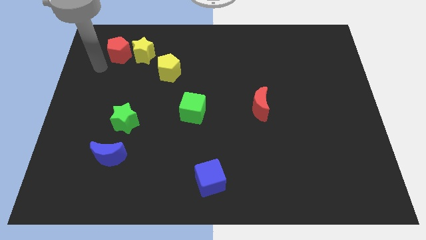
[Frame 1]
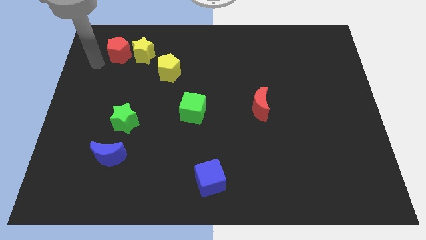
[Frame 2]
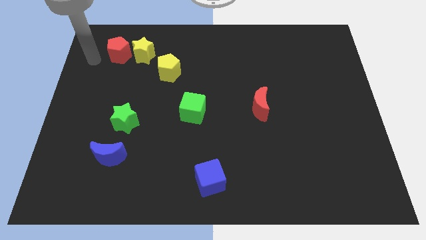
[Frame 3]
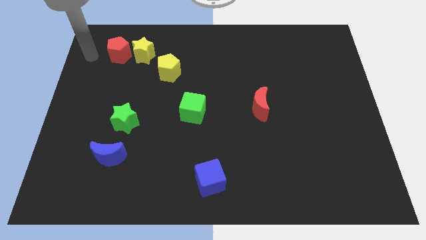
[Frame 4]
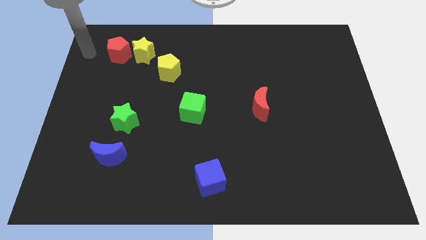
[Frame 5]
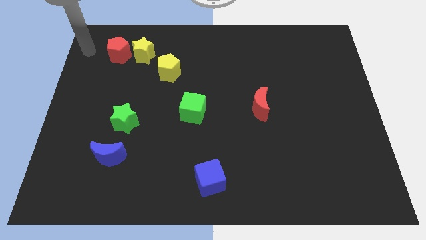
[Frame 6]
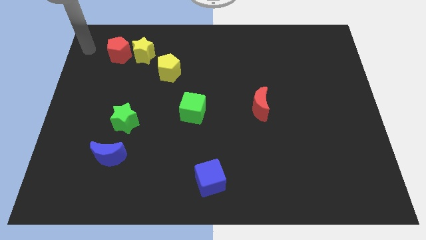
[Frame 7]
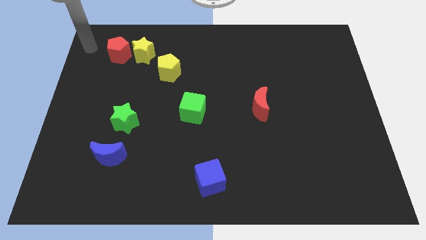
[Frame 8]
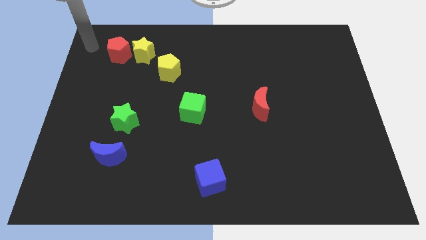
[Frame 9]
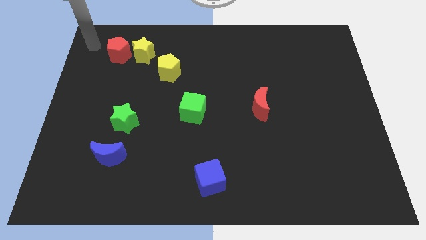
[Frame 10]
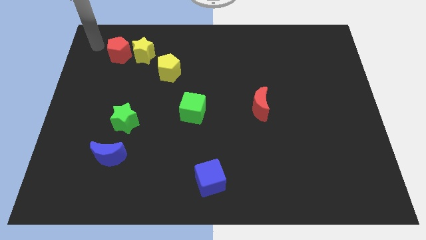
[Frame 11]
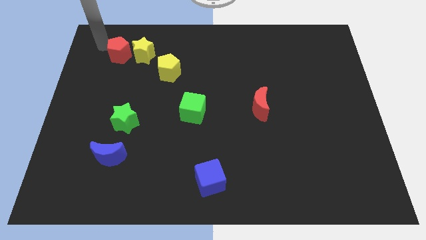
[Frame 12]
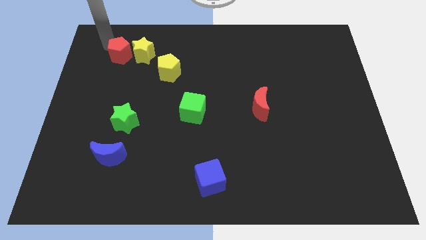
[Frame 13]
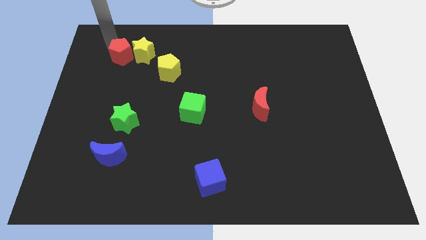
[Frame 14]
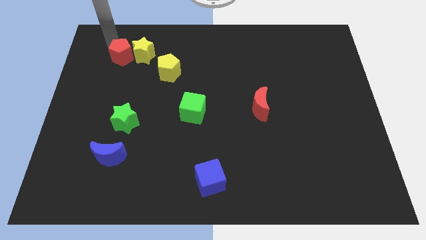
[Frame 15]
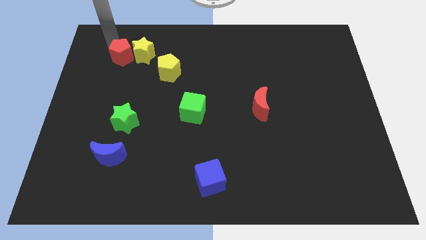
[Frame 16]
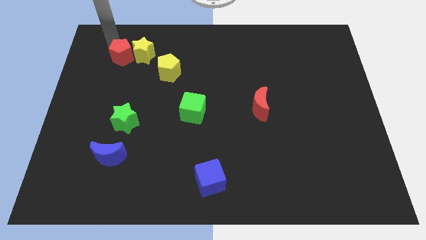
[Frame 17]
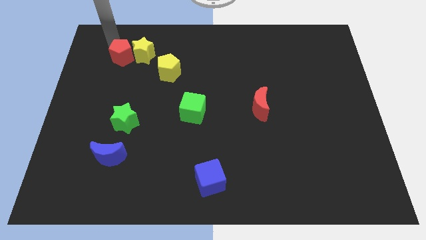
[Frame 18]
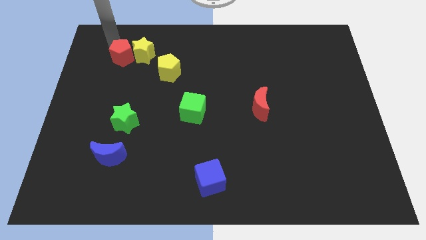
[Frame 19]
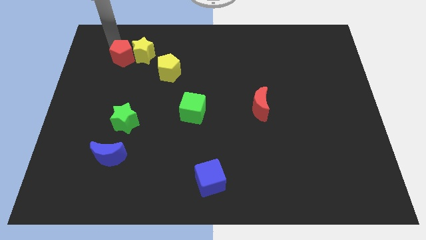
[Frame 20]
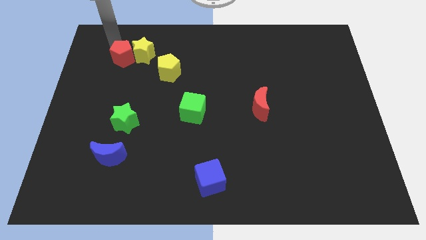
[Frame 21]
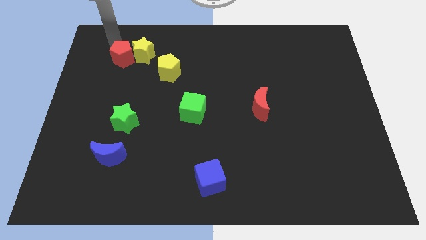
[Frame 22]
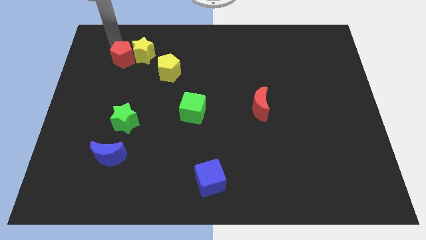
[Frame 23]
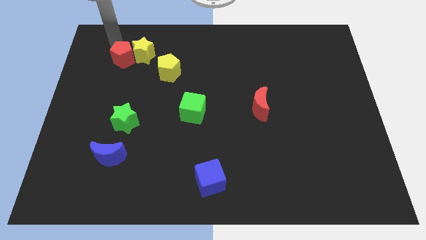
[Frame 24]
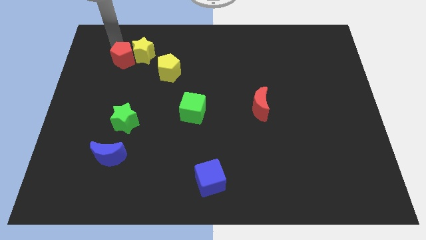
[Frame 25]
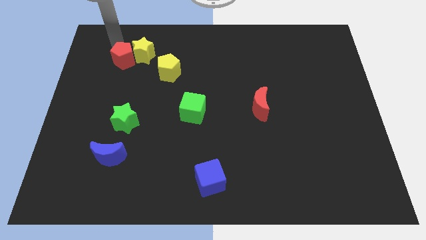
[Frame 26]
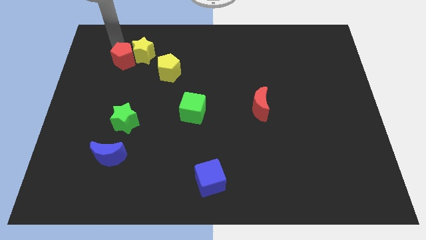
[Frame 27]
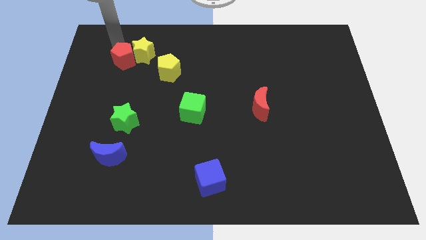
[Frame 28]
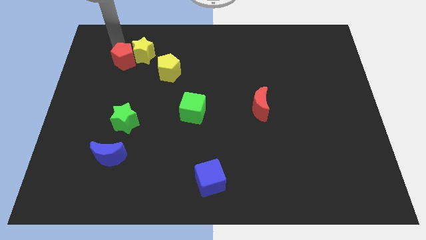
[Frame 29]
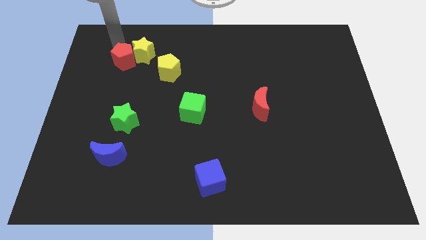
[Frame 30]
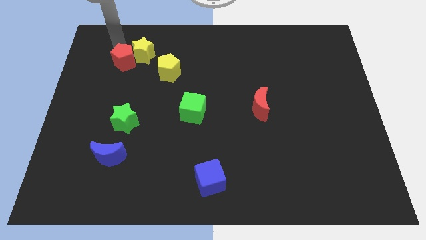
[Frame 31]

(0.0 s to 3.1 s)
slightly push the red pentagon downwards

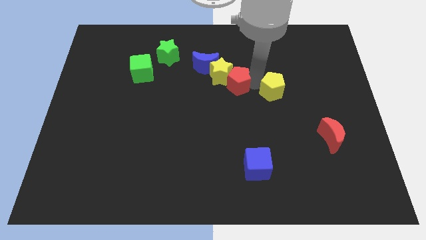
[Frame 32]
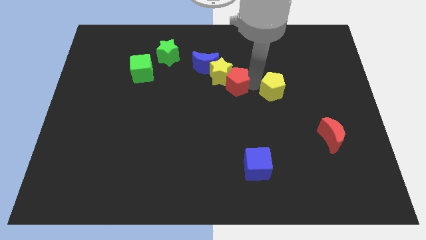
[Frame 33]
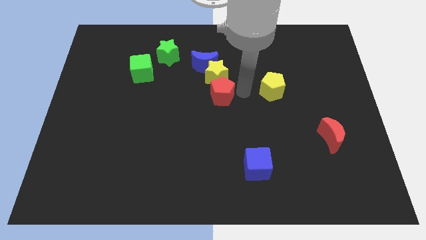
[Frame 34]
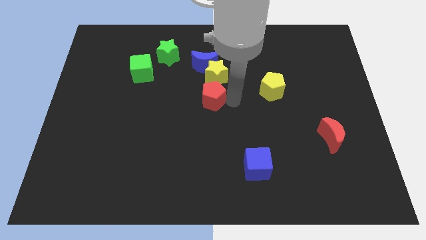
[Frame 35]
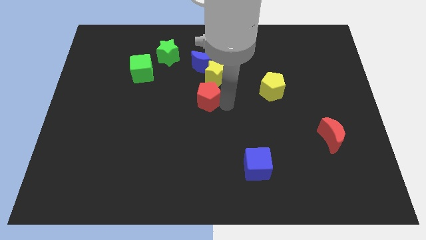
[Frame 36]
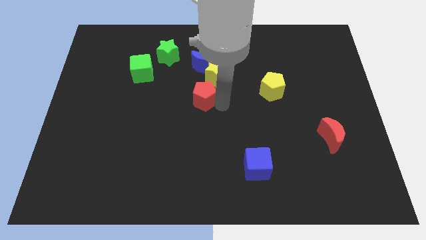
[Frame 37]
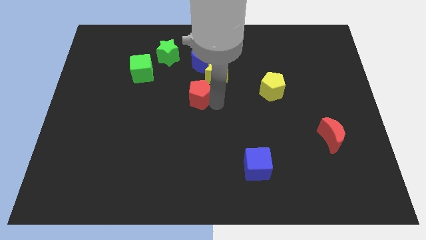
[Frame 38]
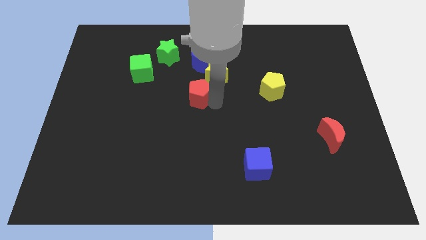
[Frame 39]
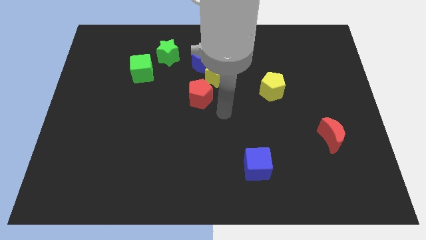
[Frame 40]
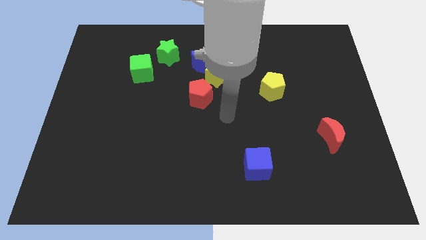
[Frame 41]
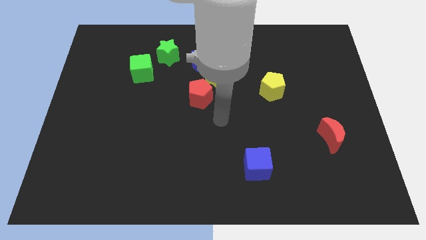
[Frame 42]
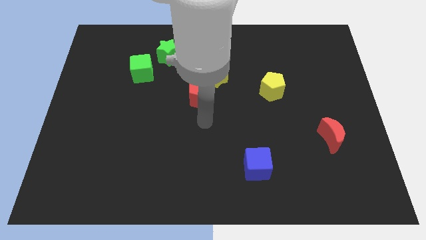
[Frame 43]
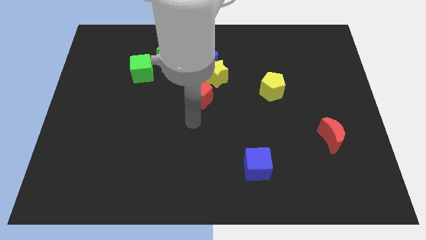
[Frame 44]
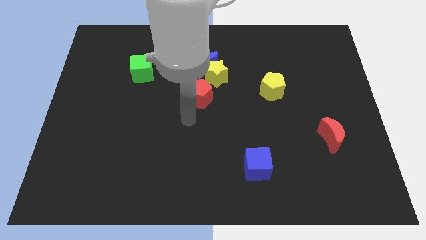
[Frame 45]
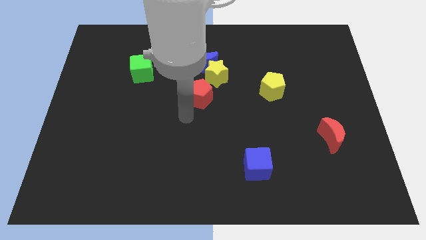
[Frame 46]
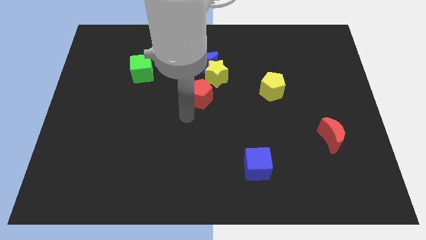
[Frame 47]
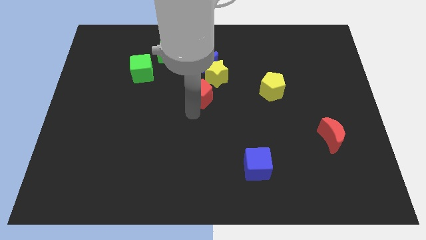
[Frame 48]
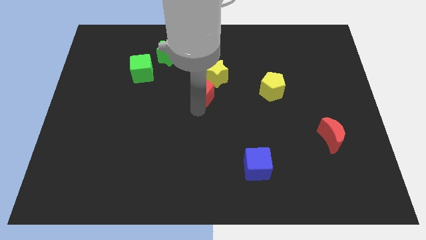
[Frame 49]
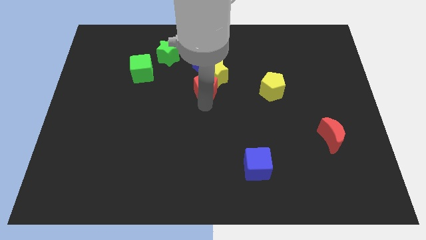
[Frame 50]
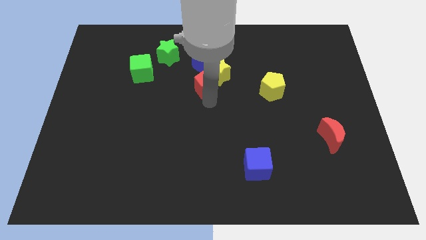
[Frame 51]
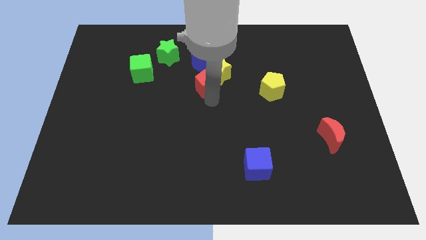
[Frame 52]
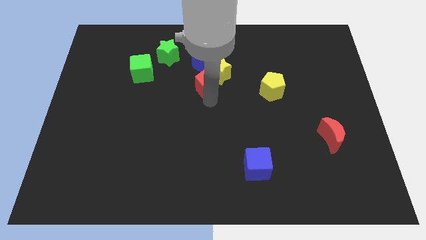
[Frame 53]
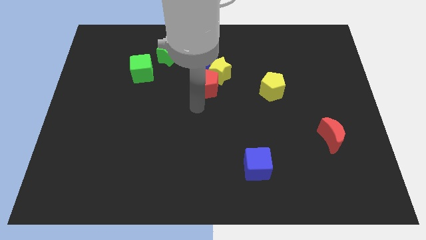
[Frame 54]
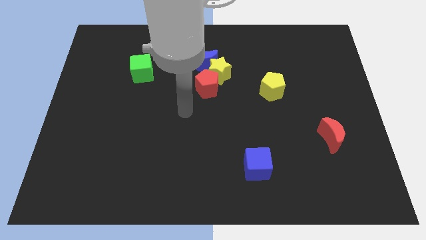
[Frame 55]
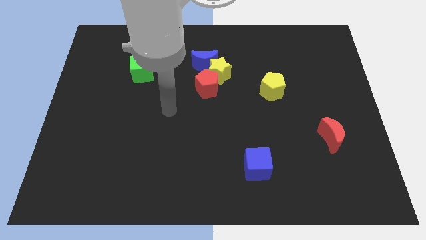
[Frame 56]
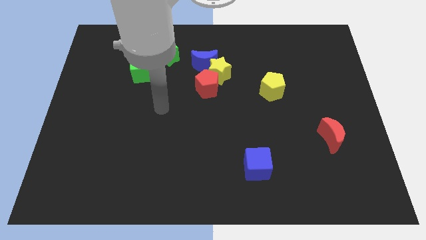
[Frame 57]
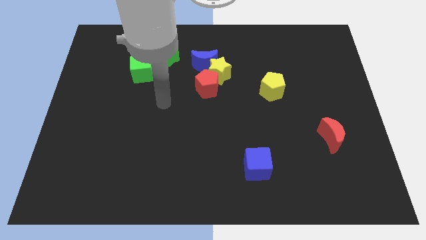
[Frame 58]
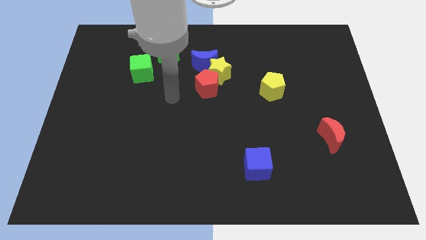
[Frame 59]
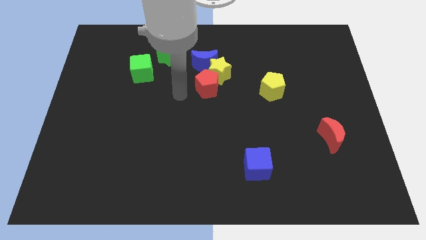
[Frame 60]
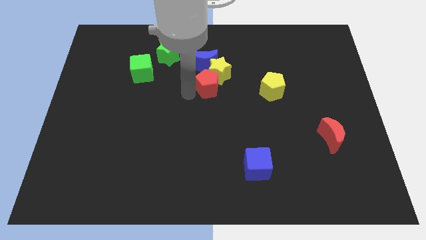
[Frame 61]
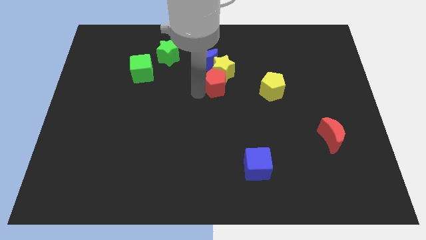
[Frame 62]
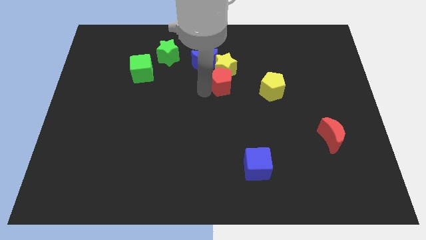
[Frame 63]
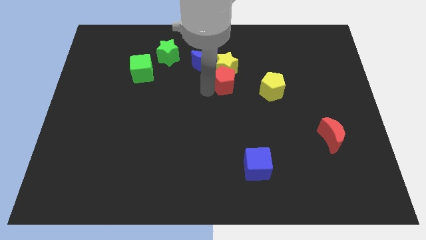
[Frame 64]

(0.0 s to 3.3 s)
place the red pentagon under the yellow star

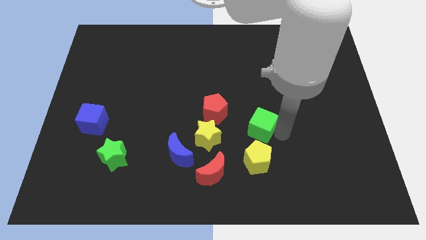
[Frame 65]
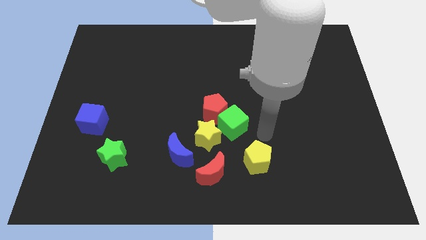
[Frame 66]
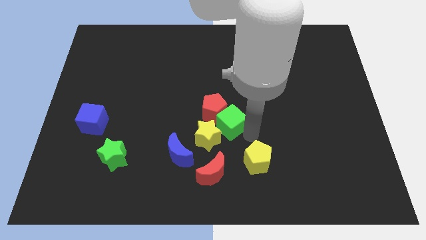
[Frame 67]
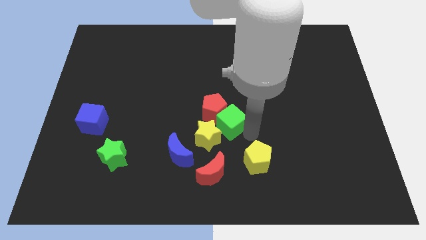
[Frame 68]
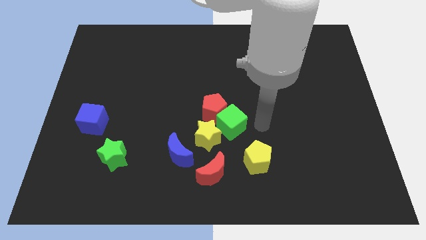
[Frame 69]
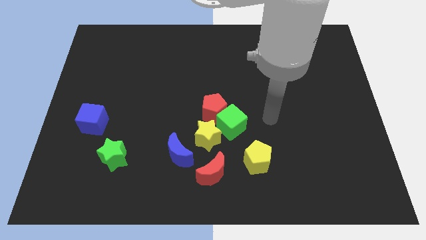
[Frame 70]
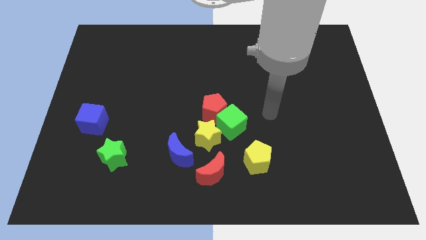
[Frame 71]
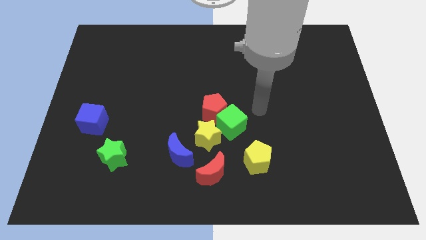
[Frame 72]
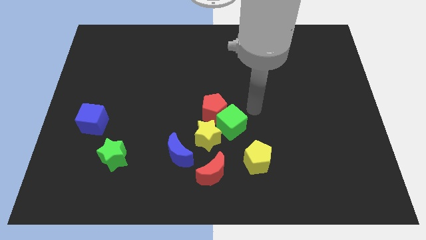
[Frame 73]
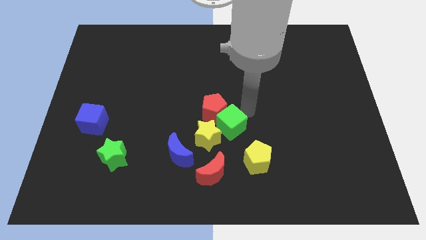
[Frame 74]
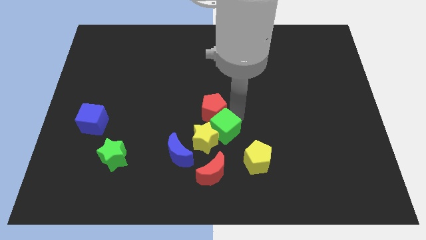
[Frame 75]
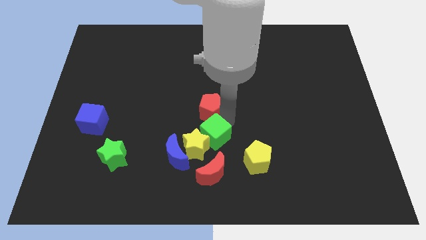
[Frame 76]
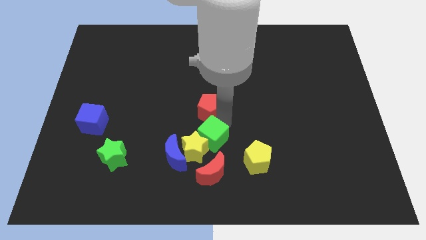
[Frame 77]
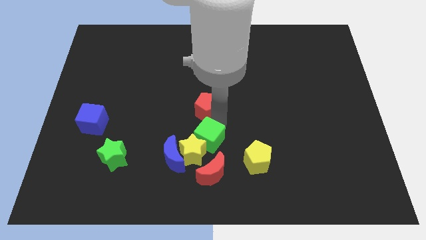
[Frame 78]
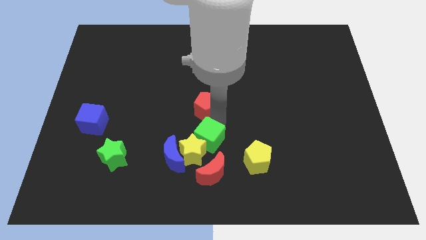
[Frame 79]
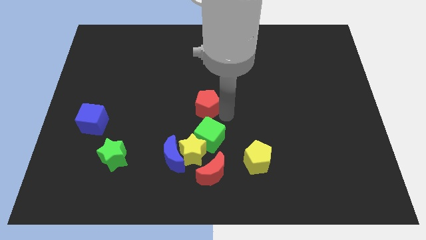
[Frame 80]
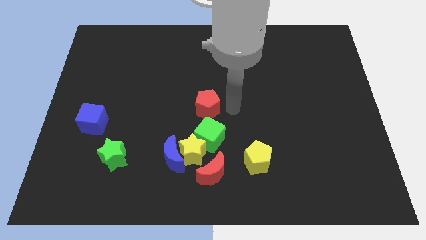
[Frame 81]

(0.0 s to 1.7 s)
push the green cube close to the yellow star on the board

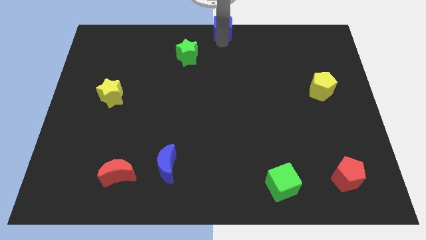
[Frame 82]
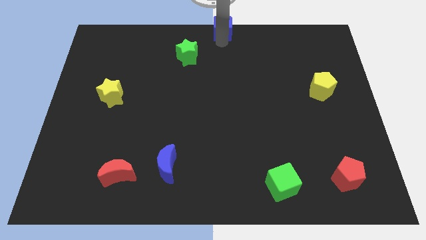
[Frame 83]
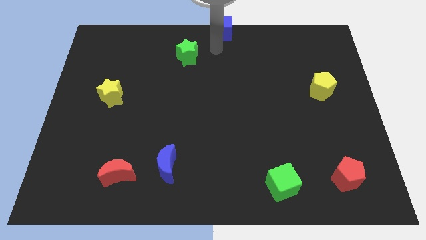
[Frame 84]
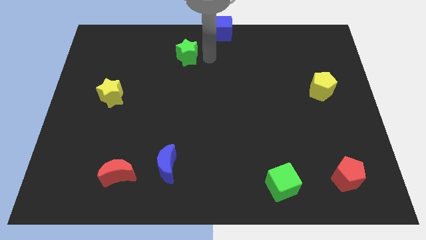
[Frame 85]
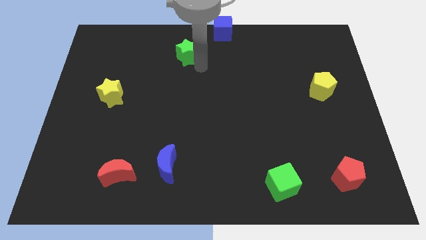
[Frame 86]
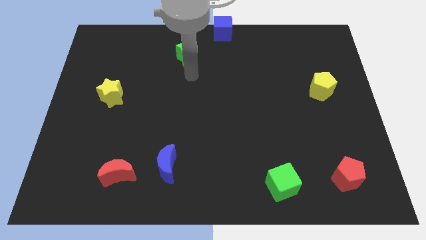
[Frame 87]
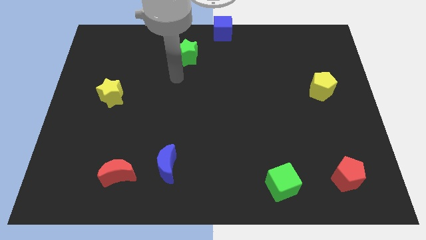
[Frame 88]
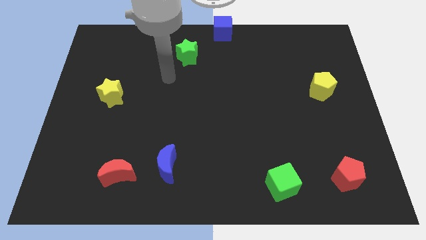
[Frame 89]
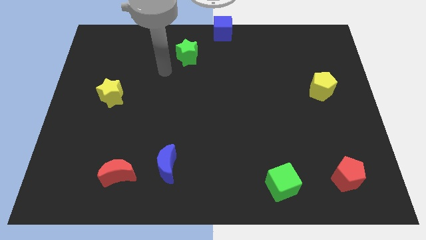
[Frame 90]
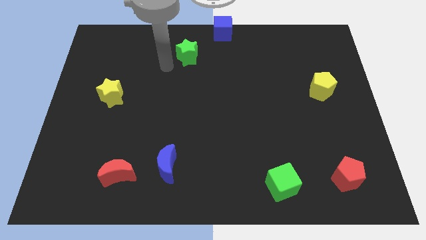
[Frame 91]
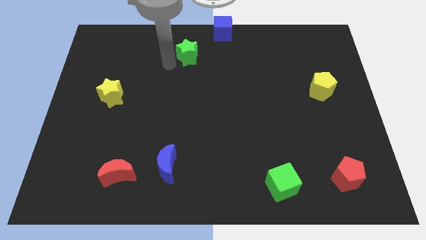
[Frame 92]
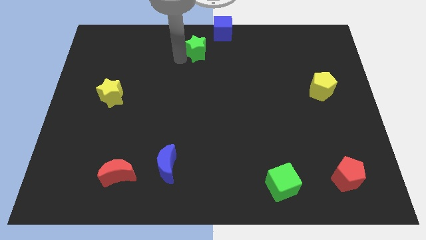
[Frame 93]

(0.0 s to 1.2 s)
move your arm away from the blue cube
